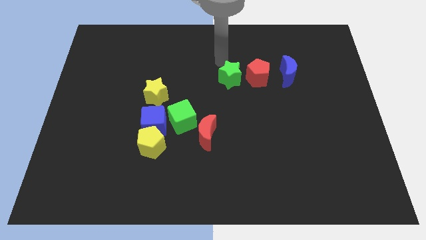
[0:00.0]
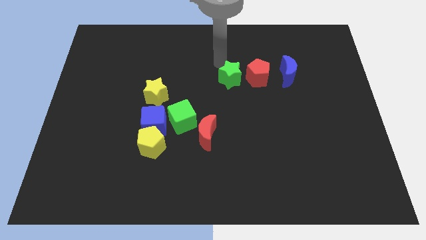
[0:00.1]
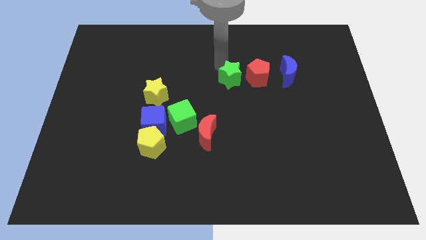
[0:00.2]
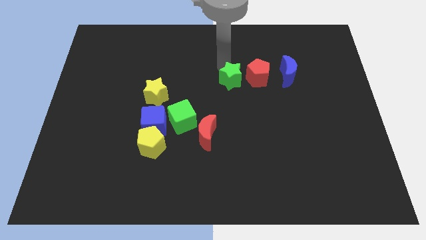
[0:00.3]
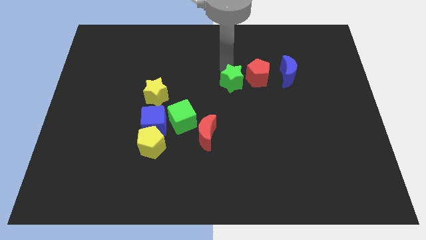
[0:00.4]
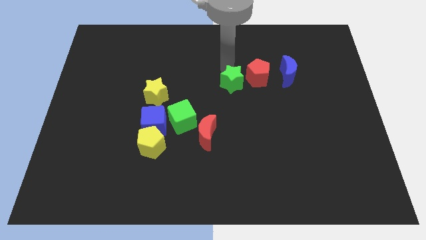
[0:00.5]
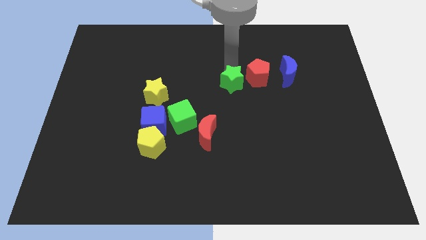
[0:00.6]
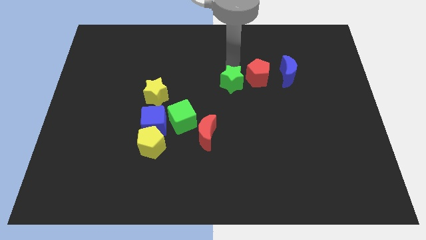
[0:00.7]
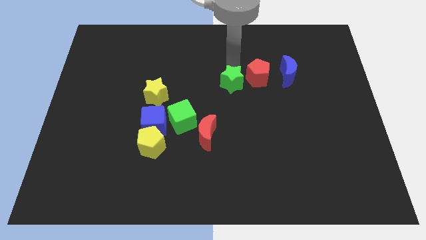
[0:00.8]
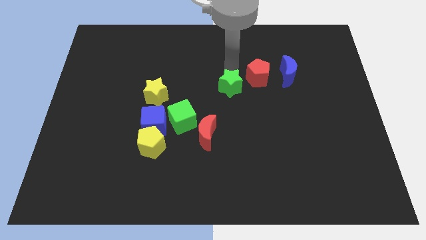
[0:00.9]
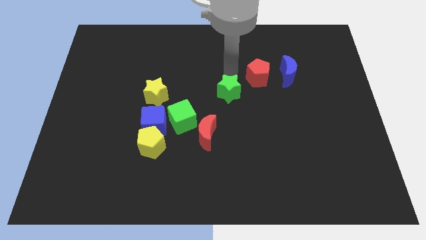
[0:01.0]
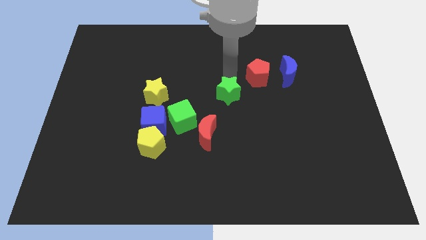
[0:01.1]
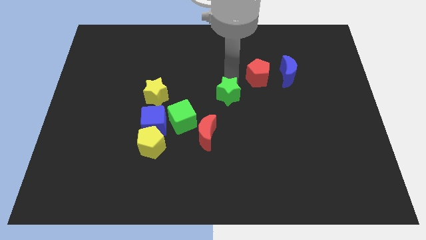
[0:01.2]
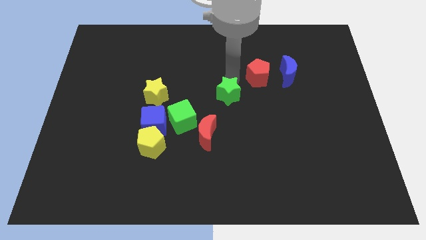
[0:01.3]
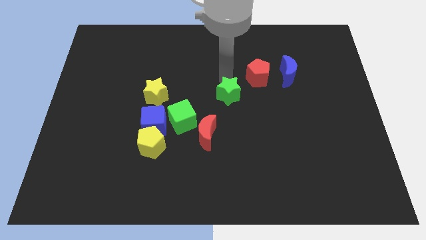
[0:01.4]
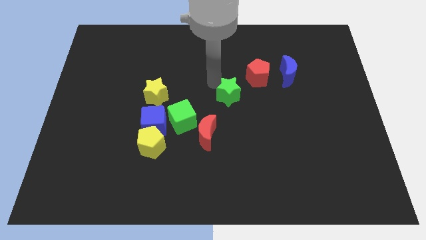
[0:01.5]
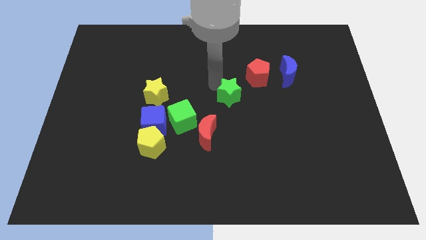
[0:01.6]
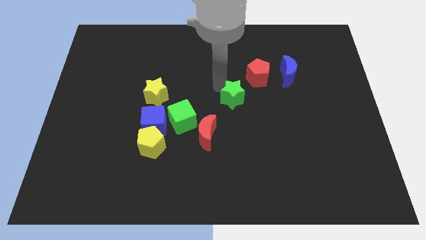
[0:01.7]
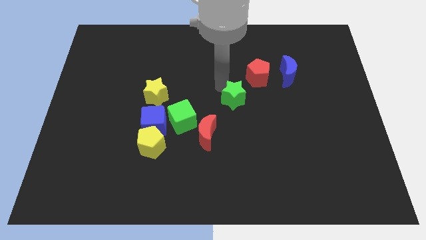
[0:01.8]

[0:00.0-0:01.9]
slide the green star diagonally bottom left to the red pentagon

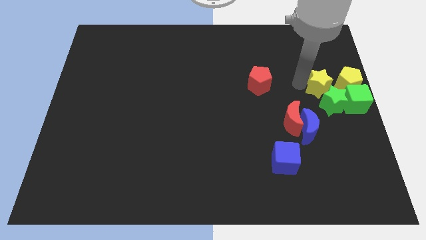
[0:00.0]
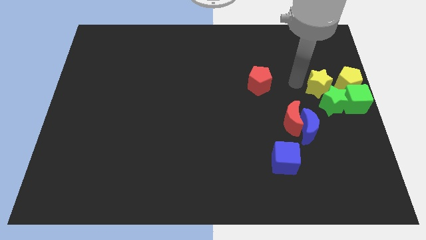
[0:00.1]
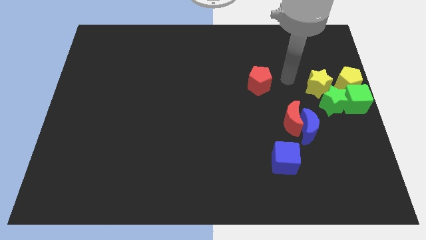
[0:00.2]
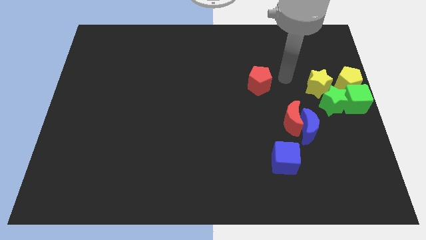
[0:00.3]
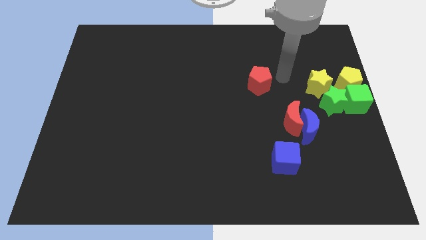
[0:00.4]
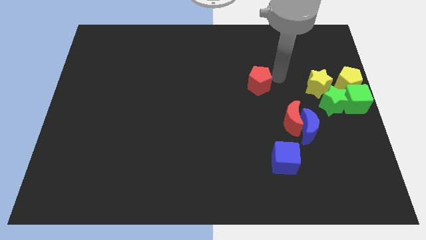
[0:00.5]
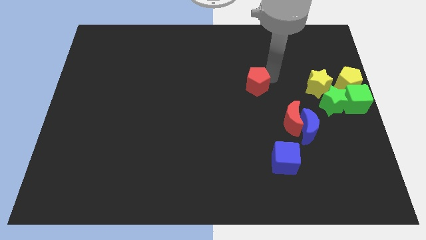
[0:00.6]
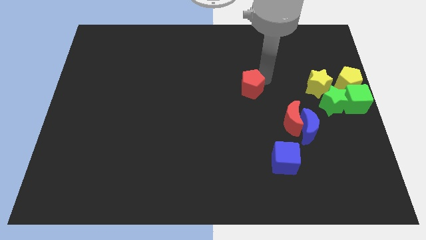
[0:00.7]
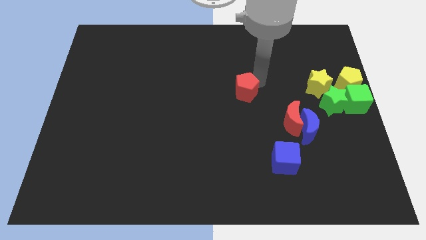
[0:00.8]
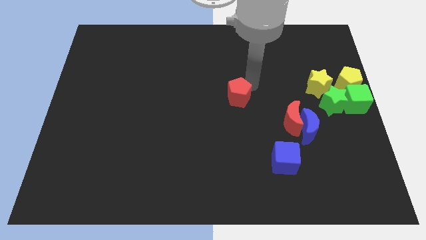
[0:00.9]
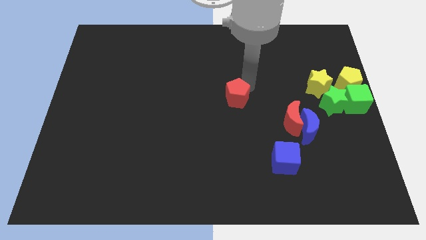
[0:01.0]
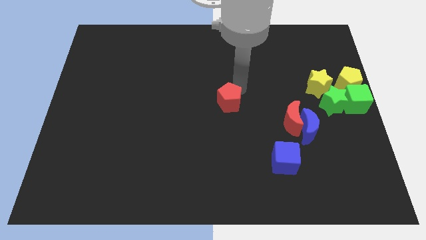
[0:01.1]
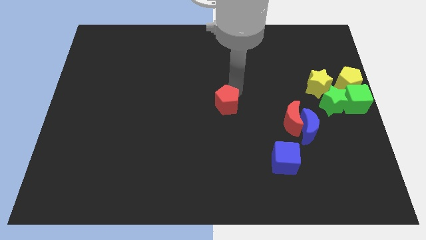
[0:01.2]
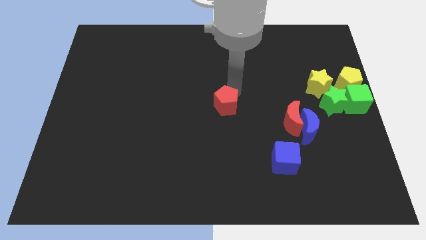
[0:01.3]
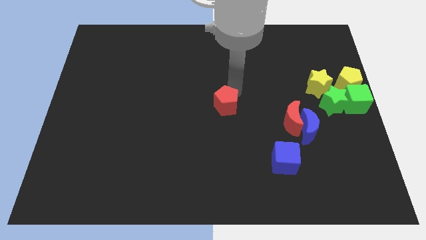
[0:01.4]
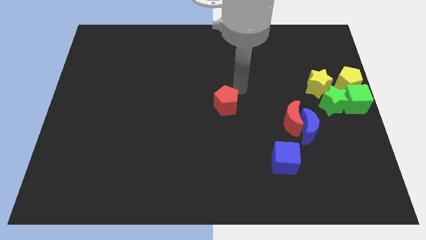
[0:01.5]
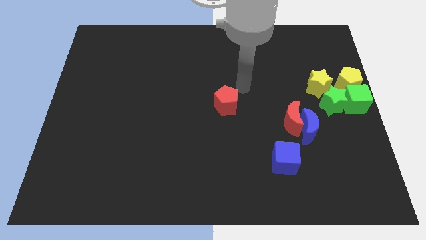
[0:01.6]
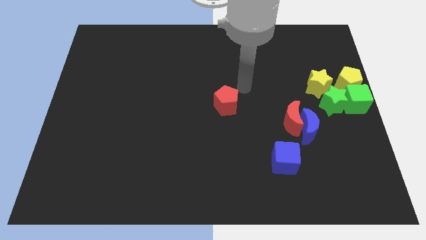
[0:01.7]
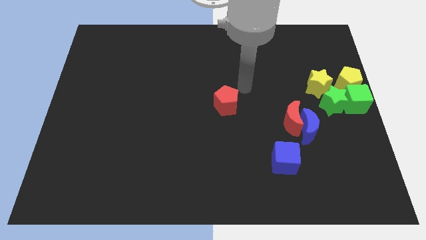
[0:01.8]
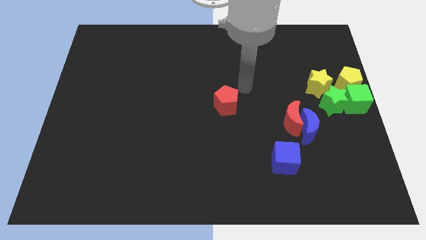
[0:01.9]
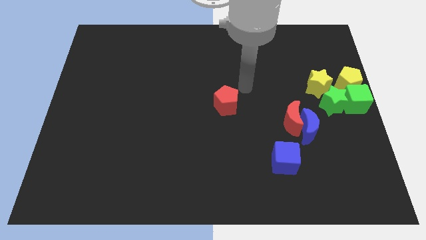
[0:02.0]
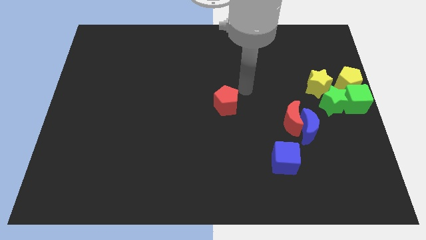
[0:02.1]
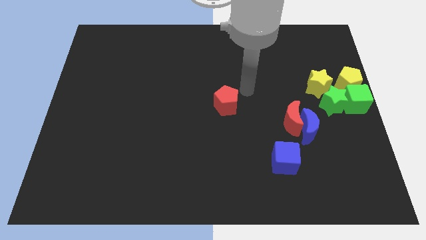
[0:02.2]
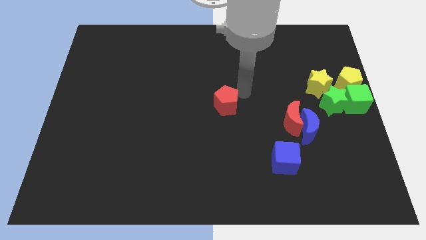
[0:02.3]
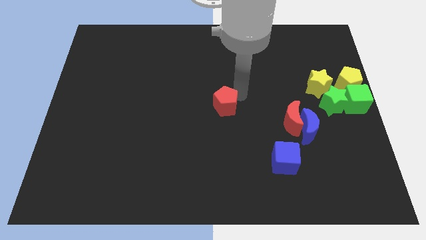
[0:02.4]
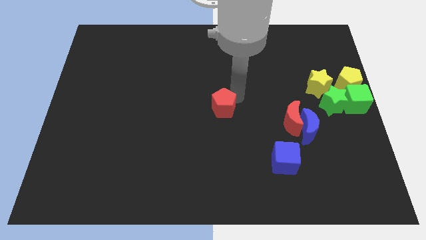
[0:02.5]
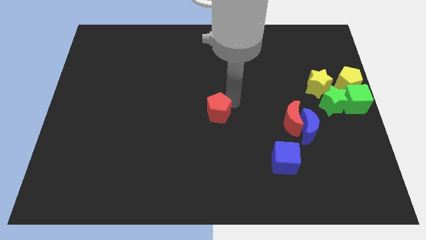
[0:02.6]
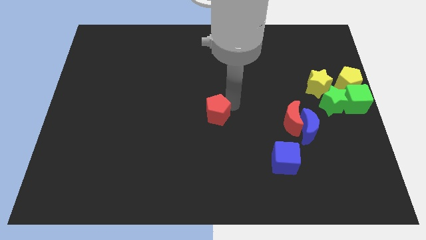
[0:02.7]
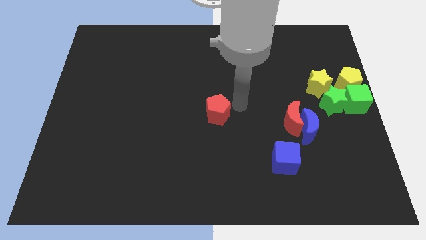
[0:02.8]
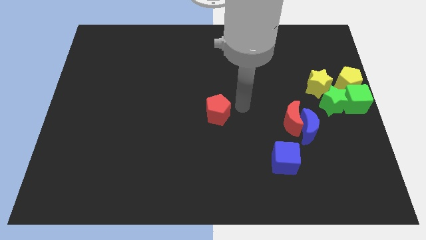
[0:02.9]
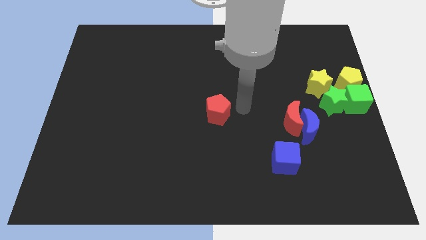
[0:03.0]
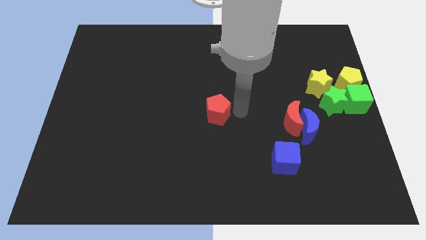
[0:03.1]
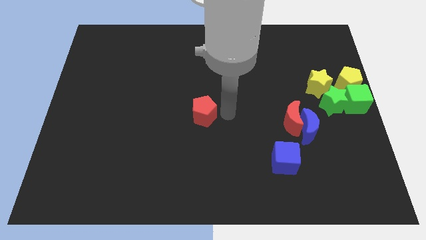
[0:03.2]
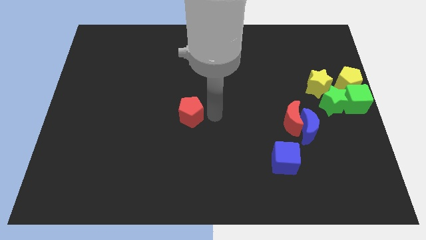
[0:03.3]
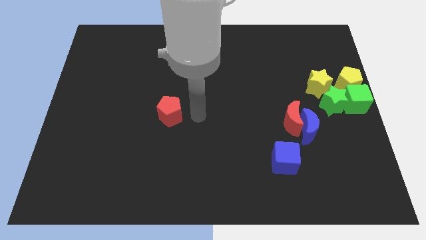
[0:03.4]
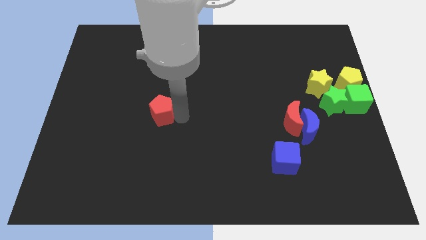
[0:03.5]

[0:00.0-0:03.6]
push the red pentagon towards the left side of the board

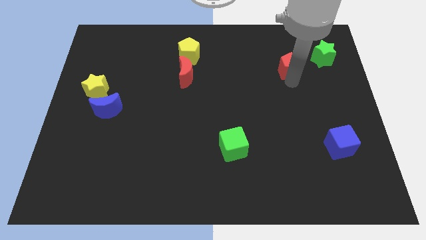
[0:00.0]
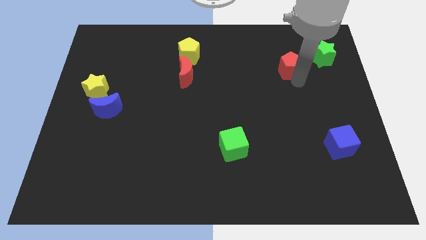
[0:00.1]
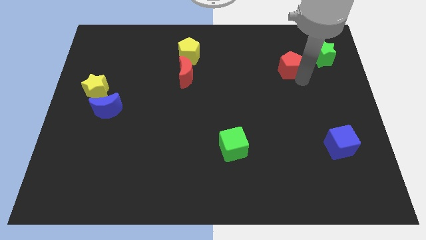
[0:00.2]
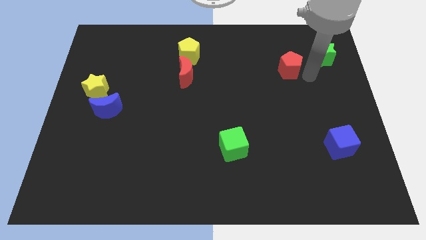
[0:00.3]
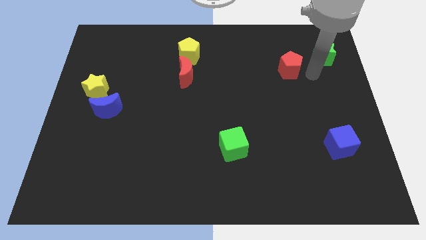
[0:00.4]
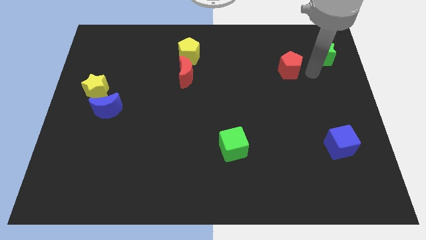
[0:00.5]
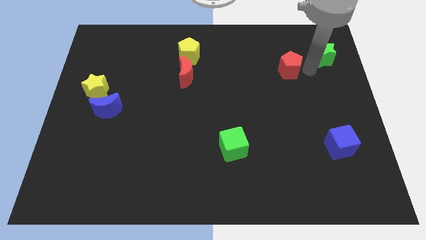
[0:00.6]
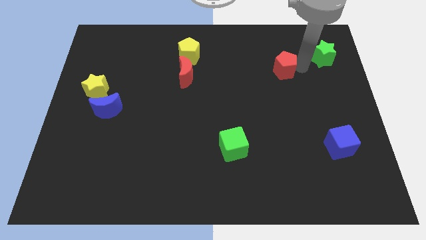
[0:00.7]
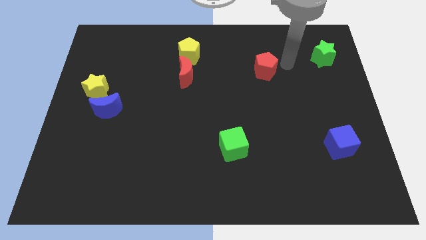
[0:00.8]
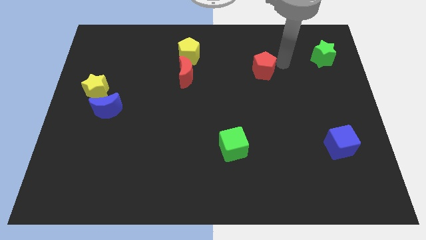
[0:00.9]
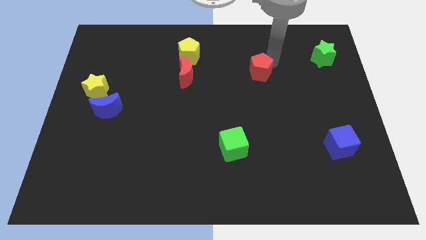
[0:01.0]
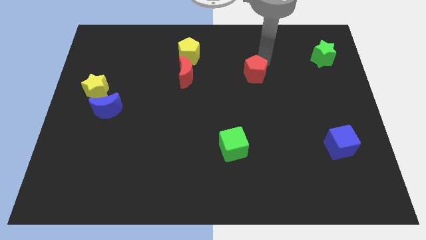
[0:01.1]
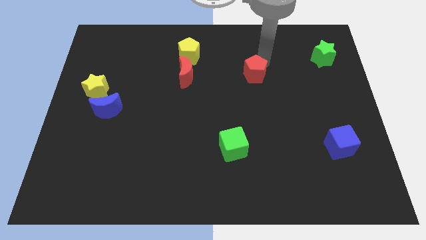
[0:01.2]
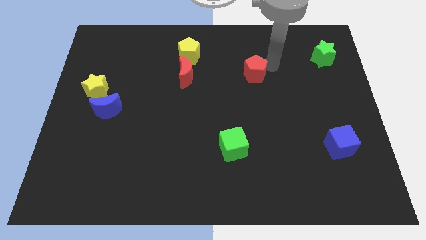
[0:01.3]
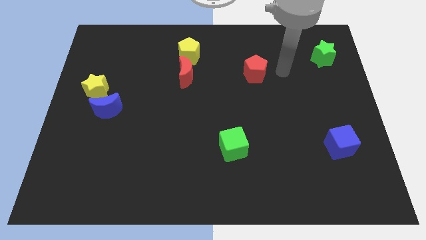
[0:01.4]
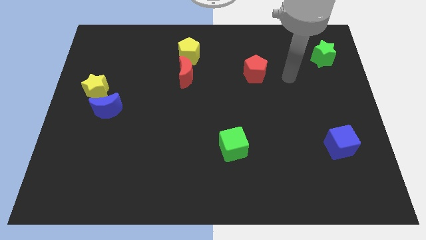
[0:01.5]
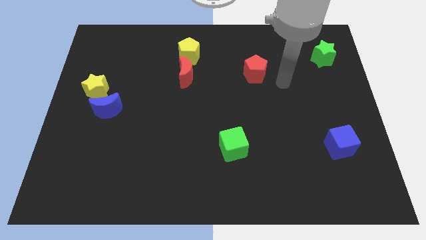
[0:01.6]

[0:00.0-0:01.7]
move the red pentagon towards the red moon

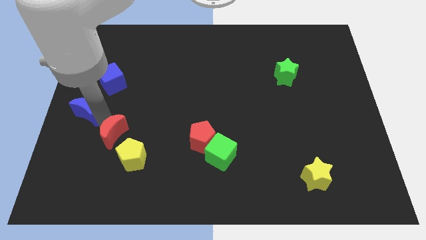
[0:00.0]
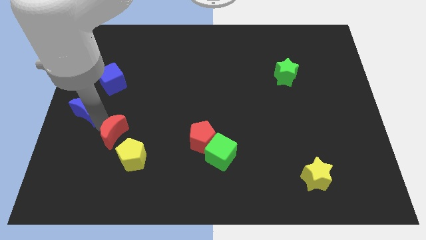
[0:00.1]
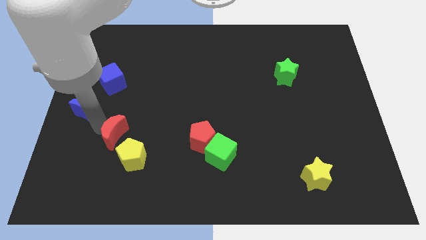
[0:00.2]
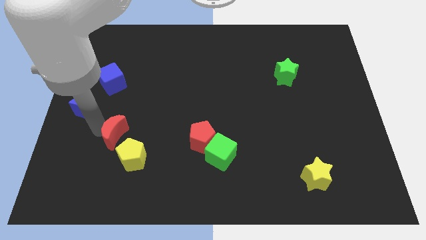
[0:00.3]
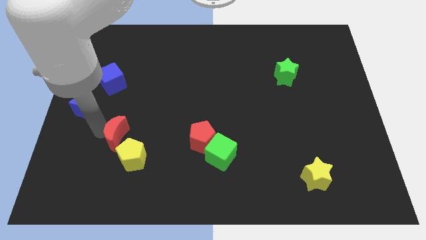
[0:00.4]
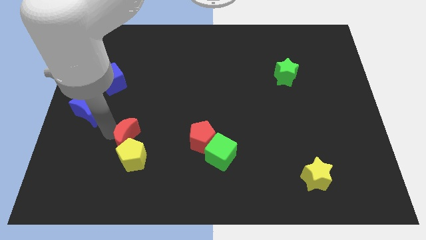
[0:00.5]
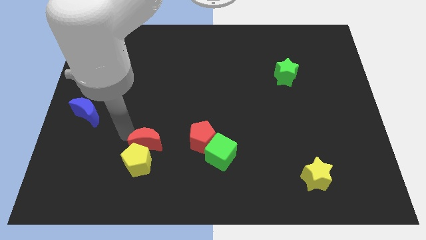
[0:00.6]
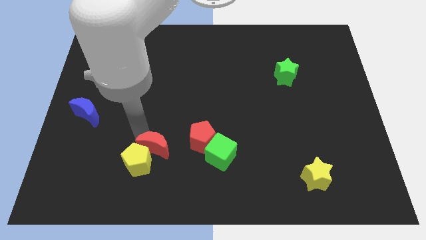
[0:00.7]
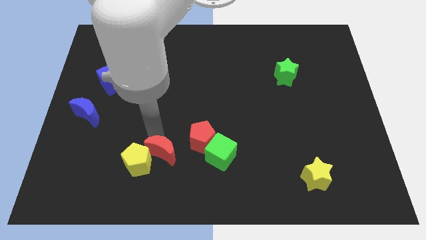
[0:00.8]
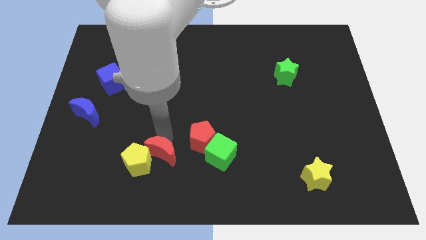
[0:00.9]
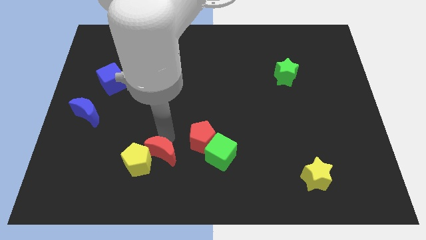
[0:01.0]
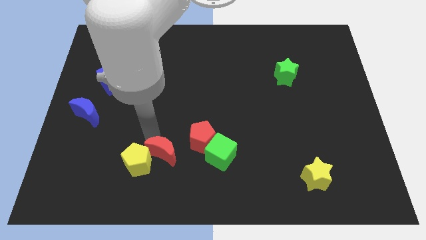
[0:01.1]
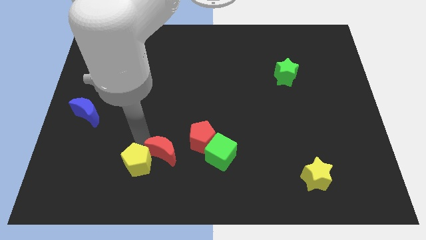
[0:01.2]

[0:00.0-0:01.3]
move the red crescent to the right side of the yellow pentagon

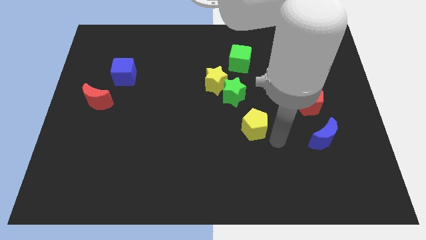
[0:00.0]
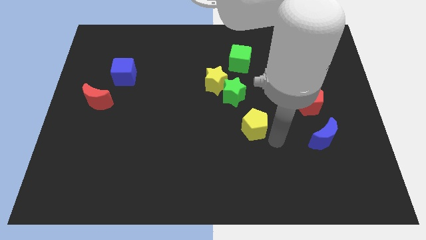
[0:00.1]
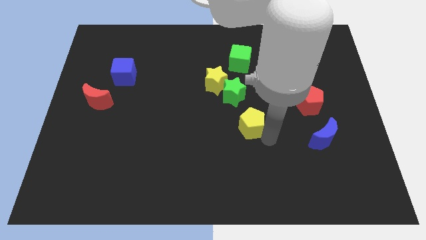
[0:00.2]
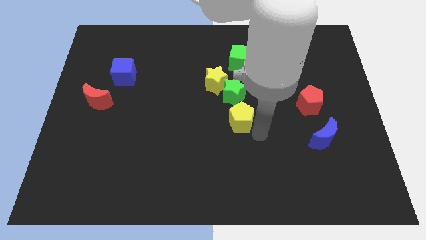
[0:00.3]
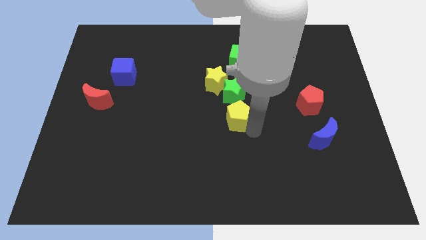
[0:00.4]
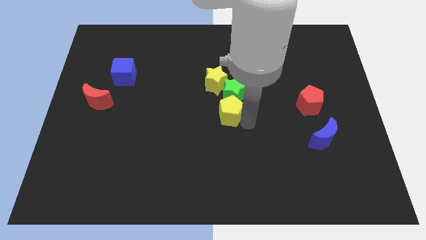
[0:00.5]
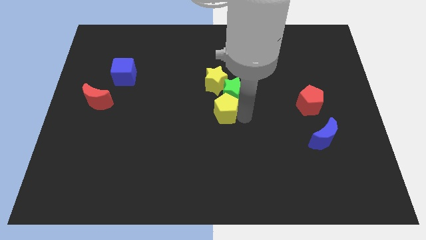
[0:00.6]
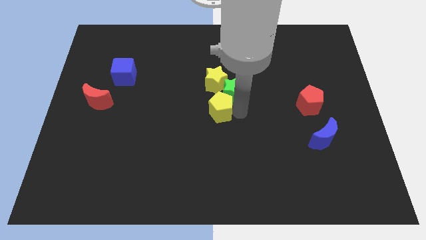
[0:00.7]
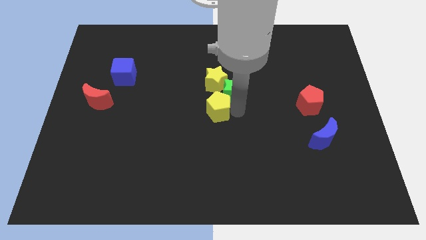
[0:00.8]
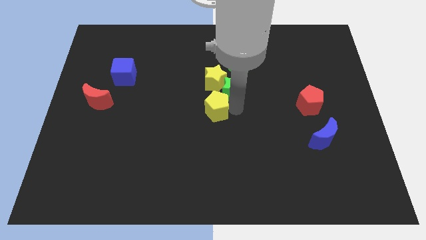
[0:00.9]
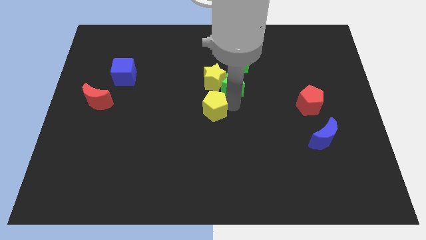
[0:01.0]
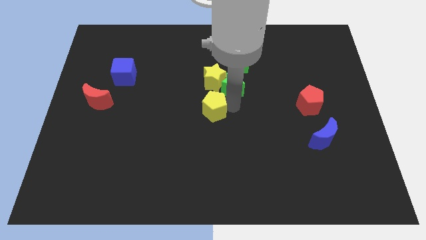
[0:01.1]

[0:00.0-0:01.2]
place the yellow pentagon towards the bottom left side of the green star
